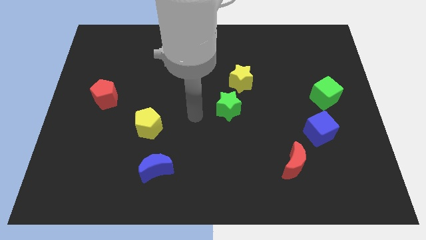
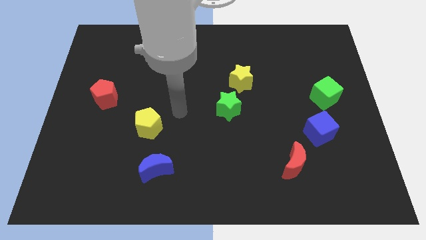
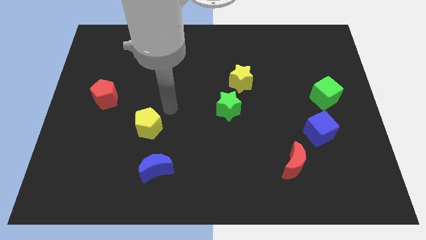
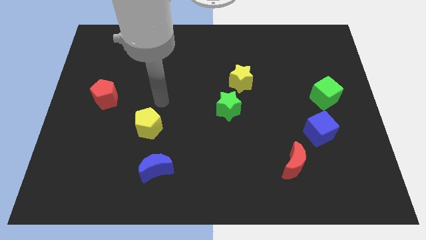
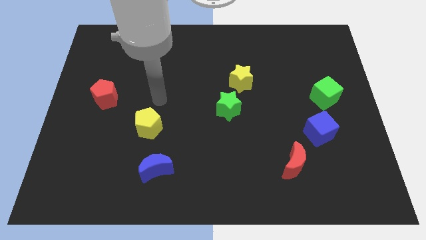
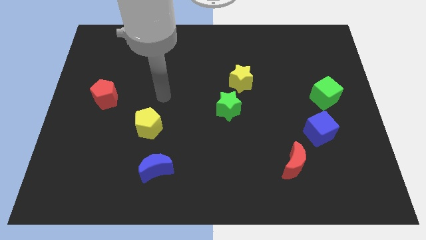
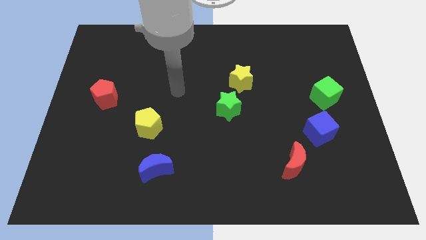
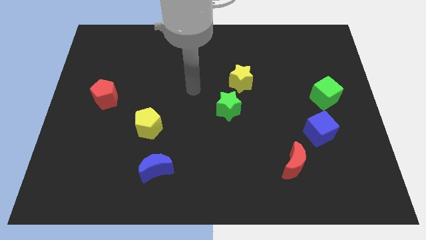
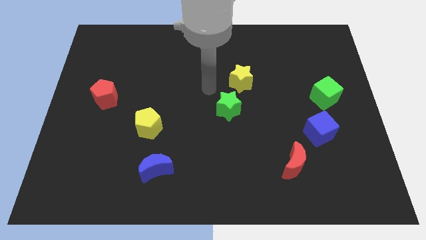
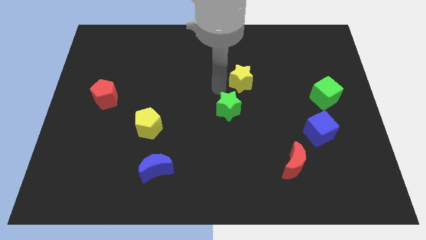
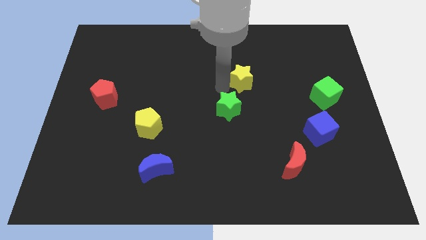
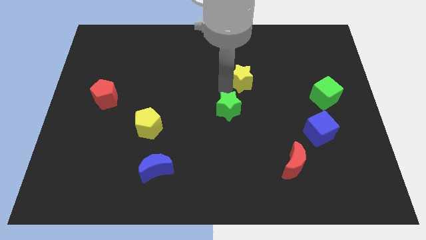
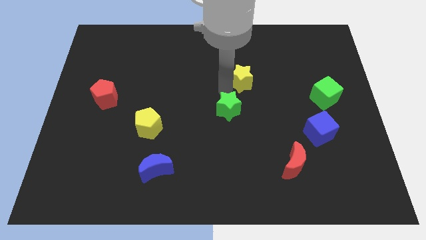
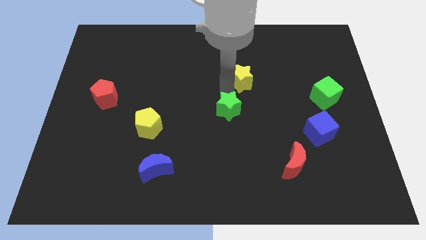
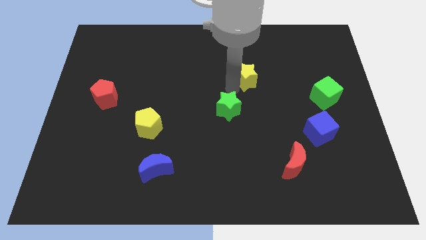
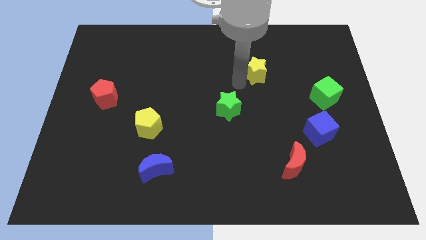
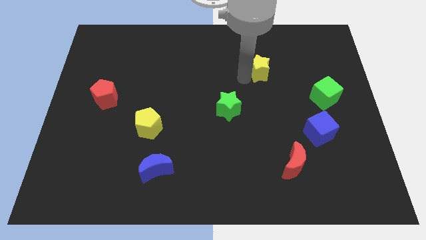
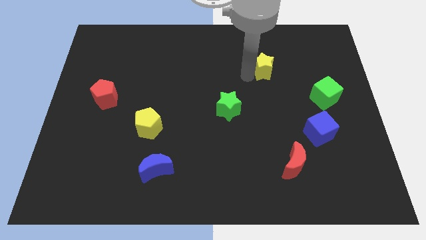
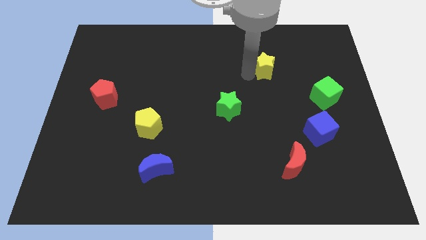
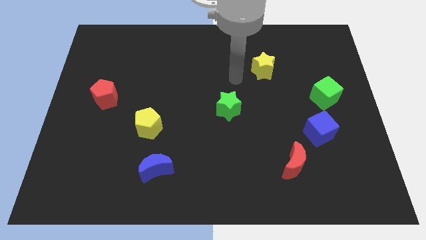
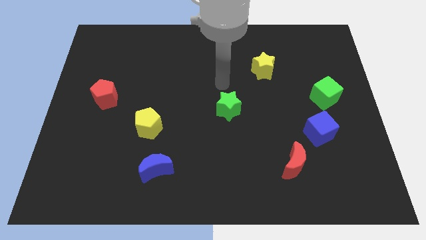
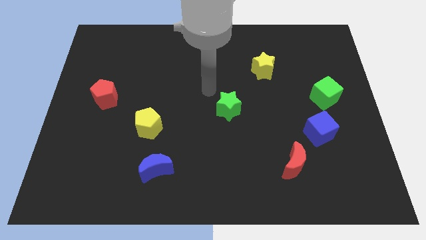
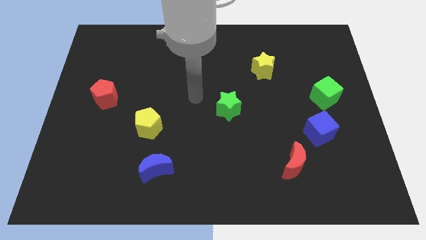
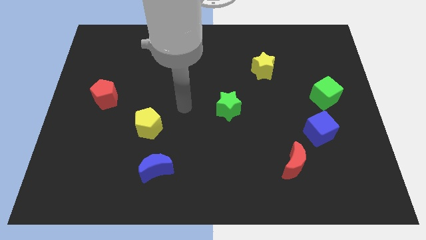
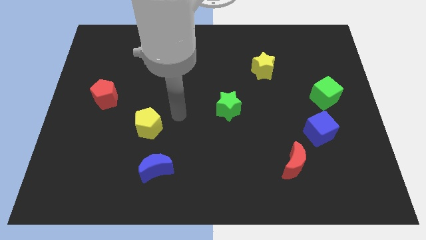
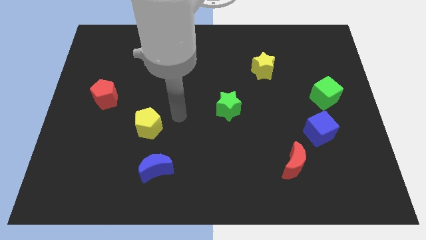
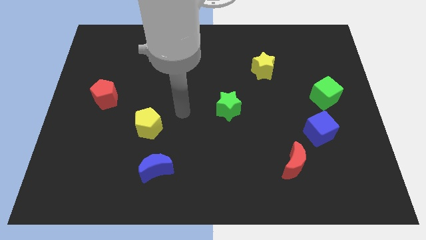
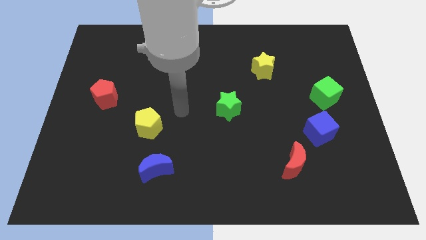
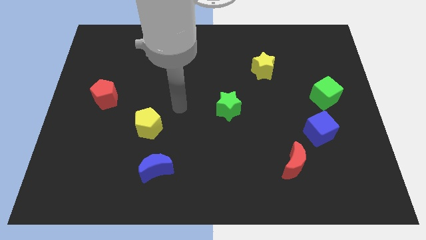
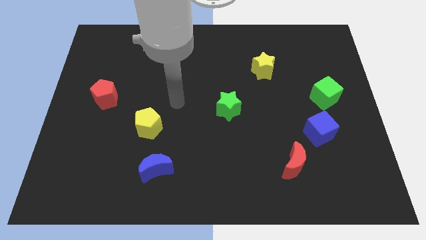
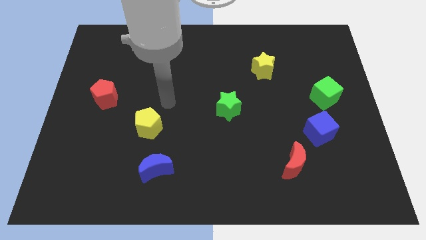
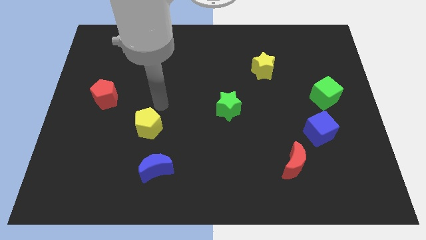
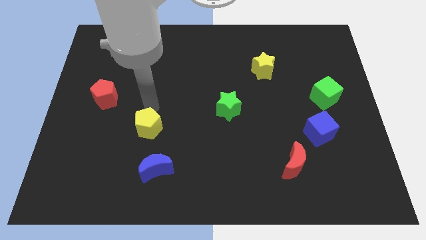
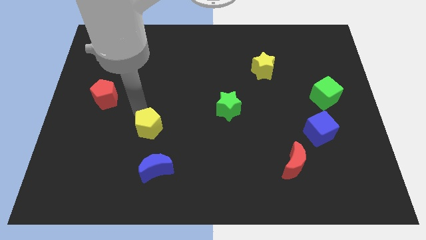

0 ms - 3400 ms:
move yellow star away from the green star

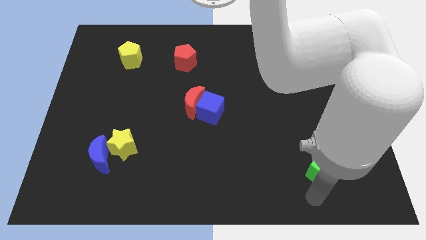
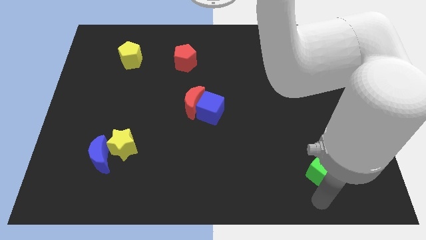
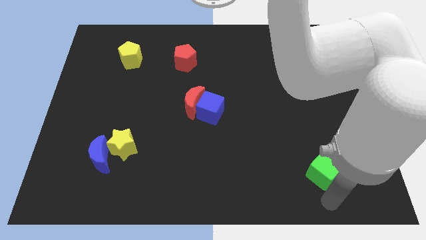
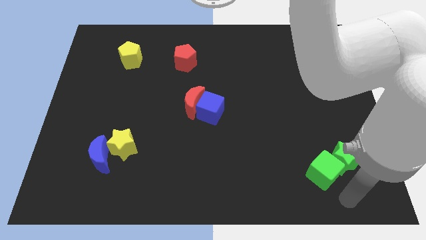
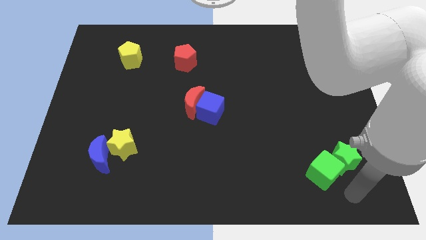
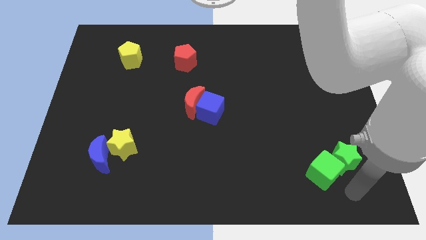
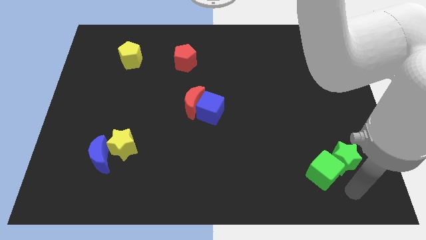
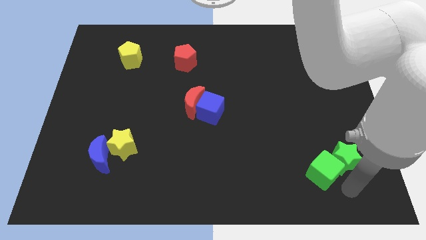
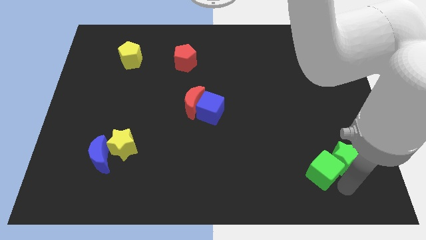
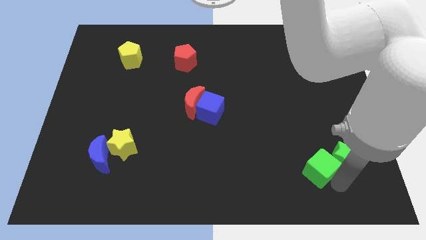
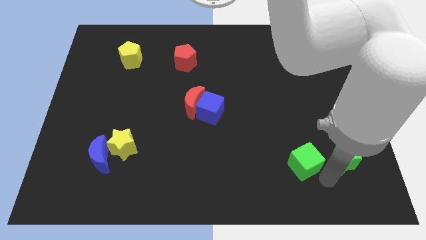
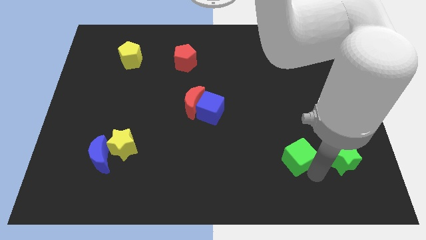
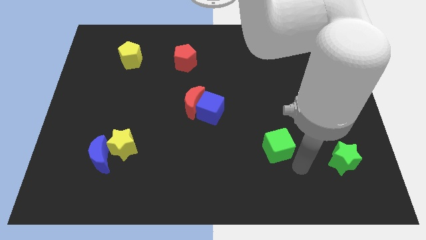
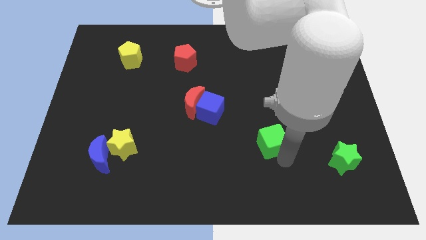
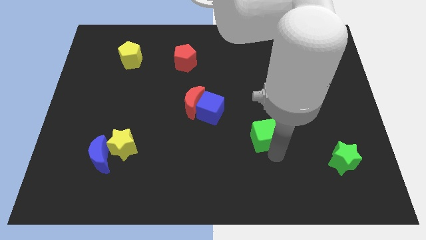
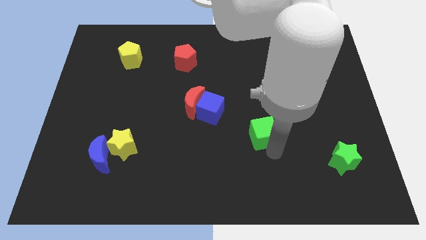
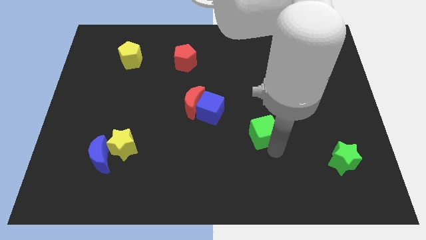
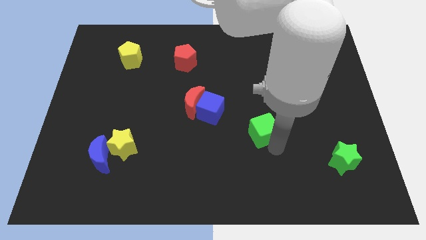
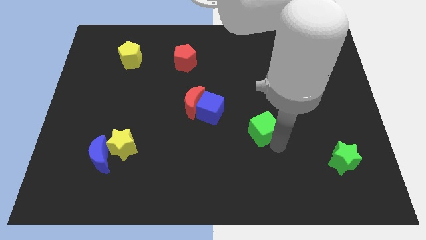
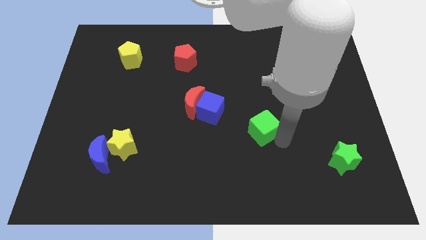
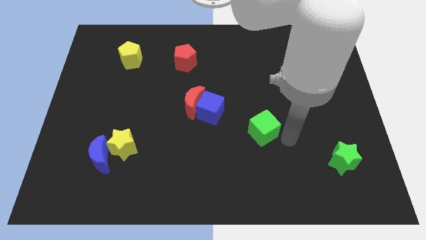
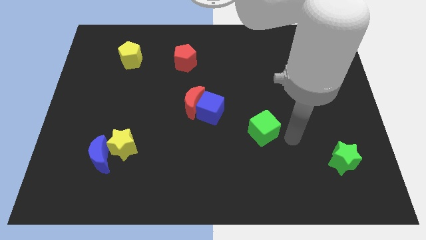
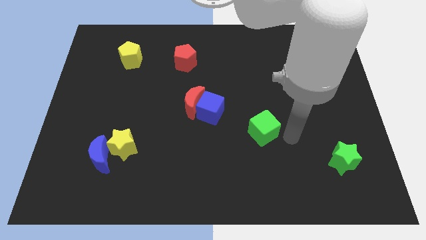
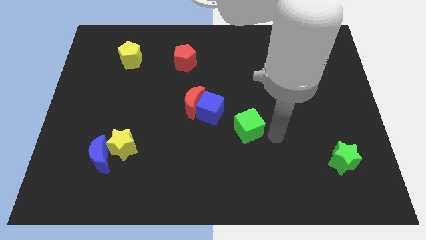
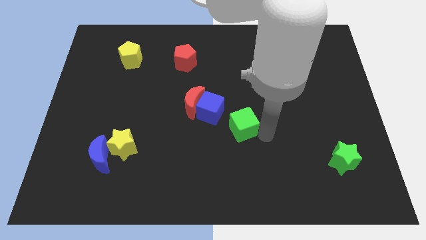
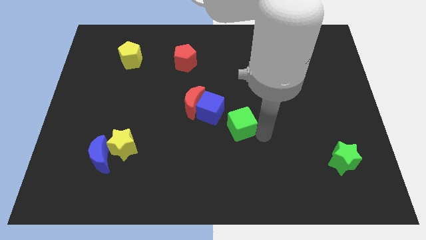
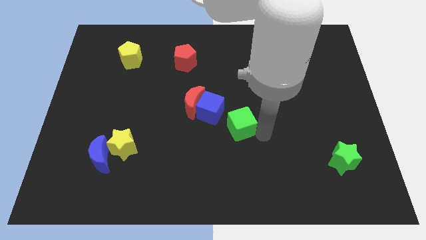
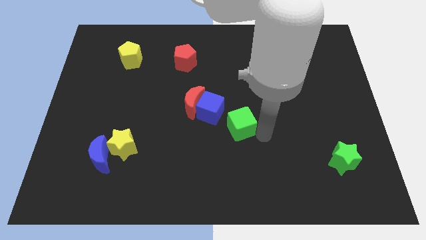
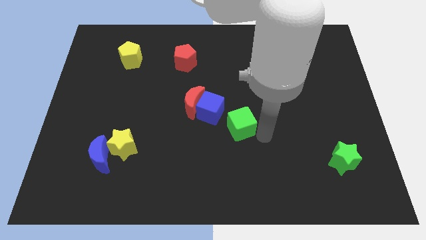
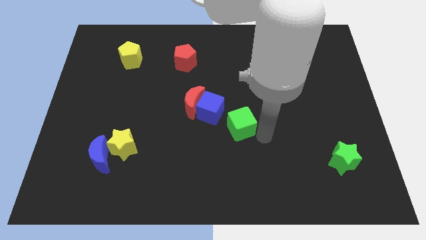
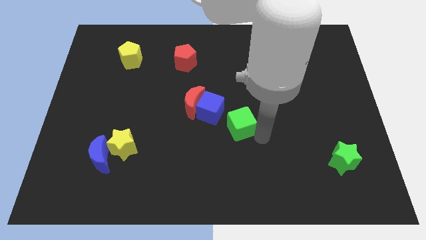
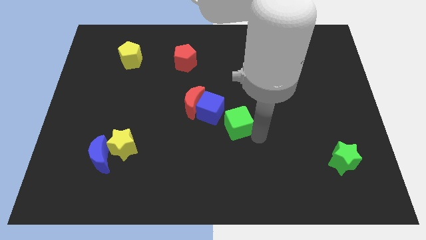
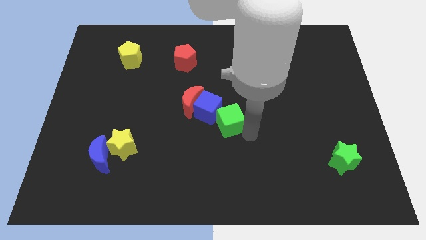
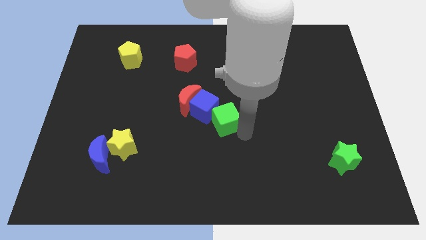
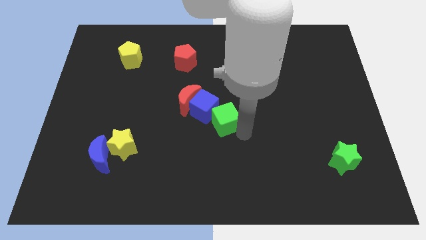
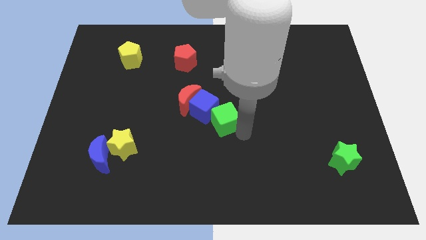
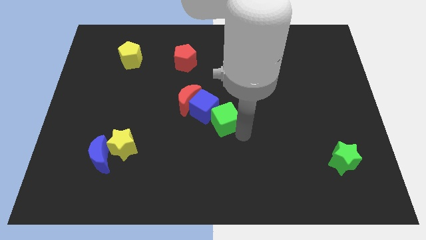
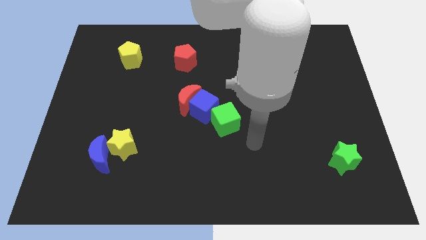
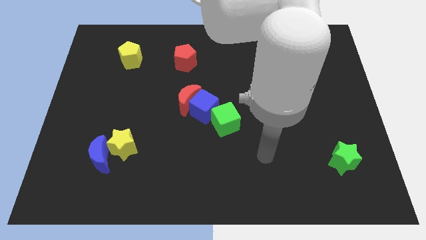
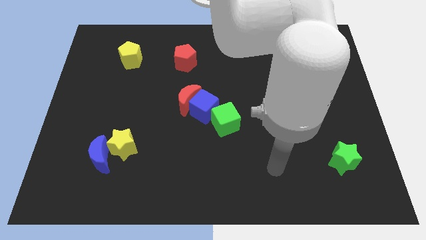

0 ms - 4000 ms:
move the green cube away from the green star

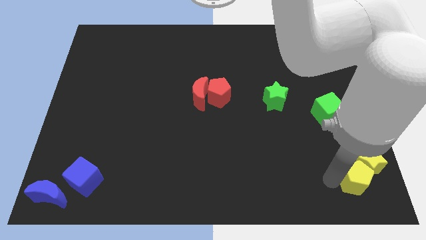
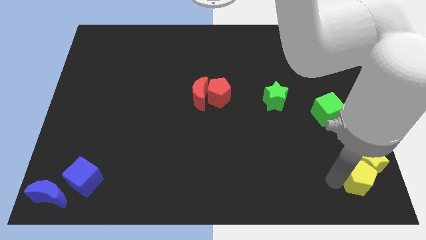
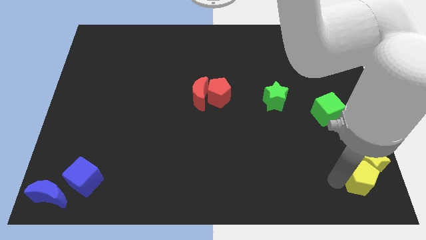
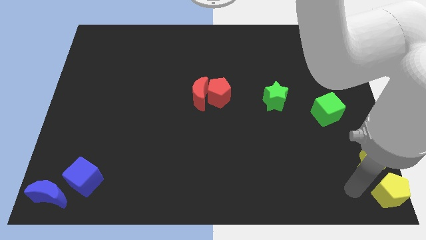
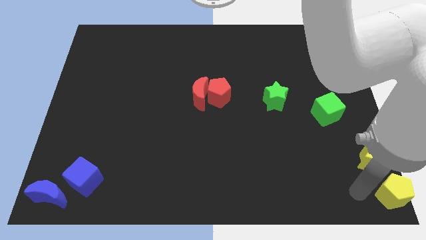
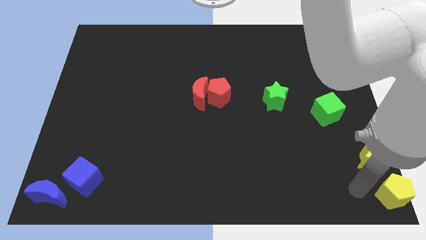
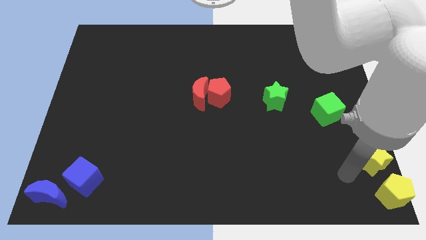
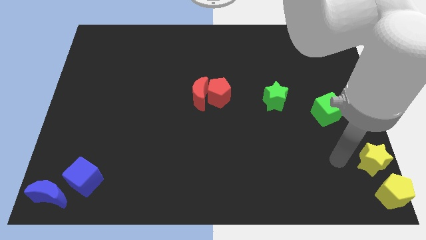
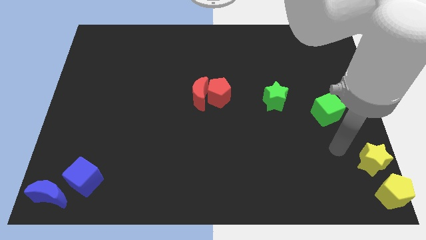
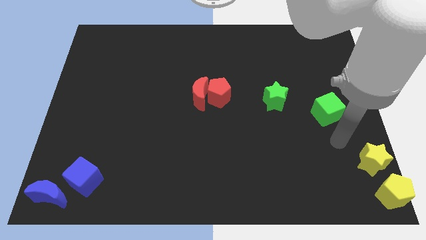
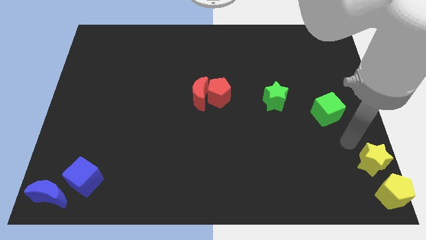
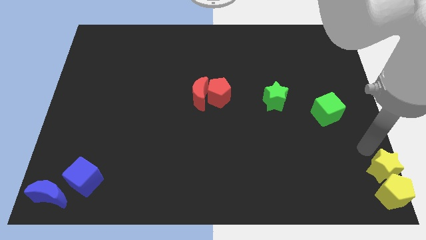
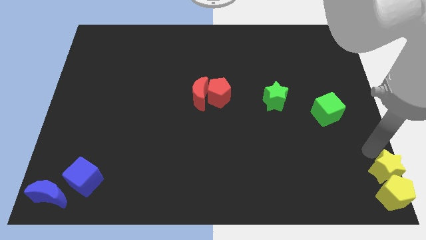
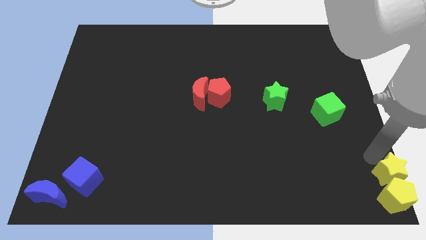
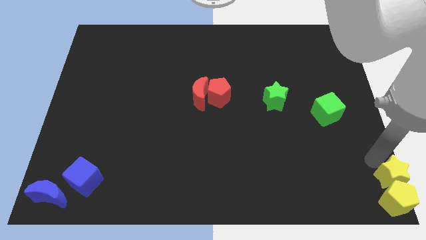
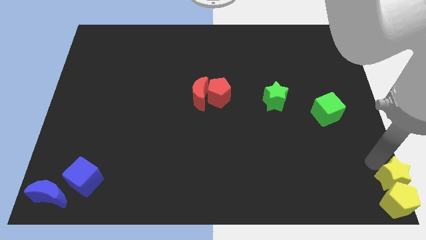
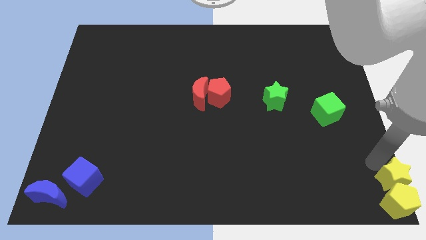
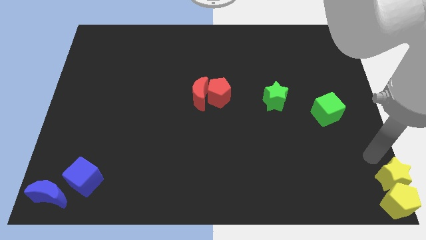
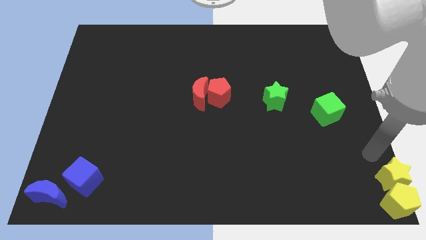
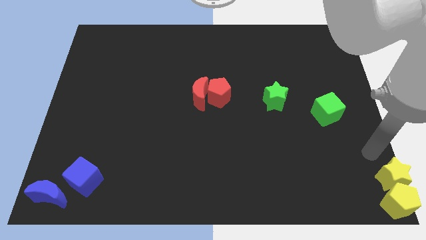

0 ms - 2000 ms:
place the yellow blocks at the bottom right corner
